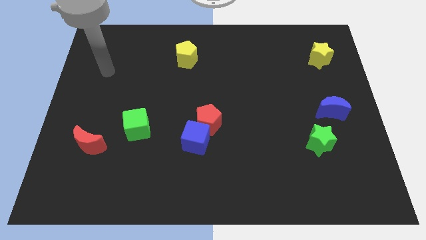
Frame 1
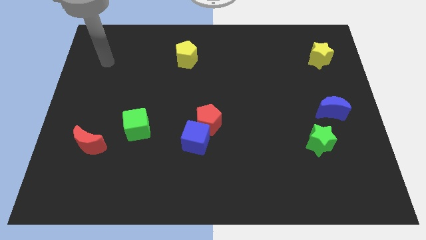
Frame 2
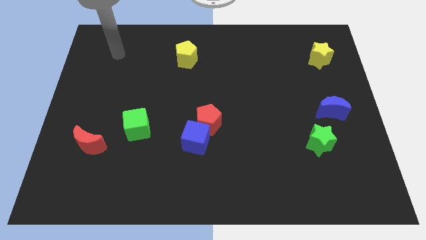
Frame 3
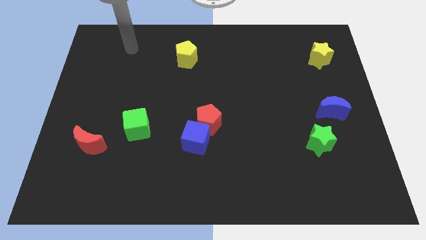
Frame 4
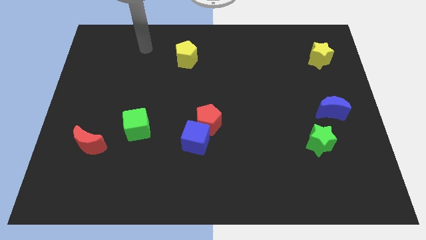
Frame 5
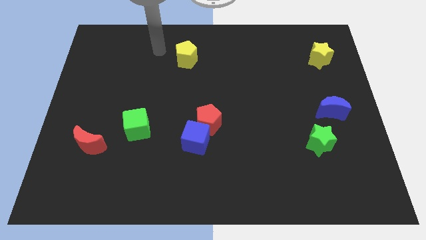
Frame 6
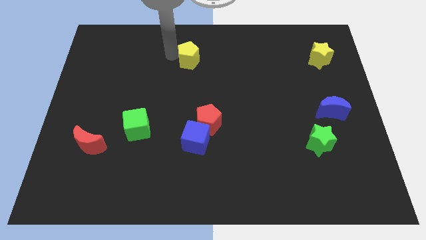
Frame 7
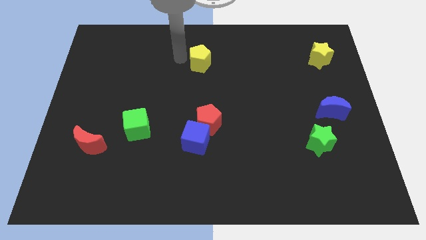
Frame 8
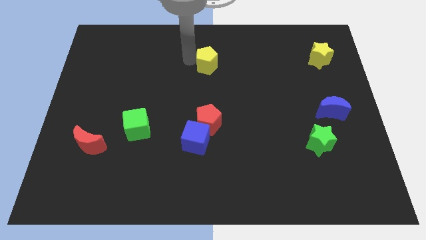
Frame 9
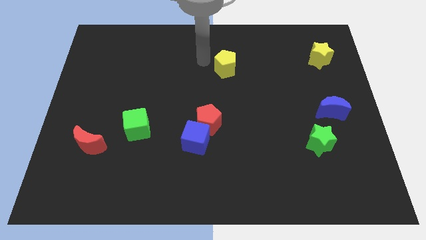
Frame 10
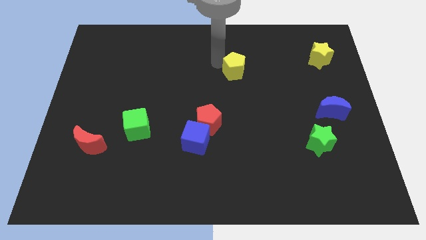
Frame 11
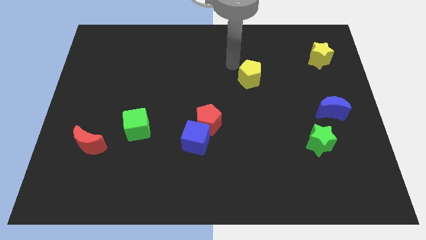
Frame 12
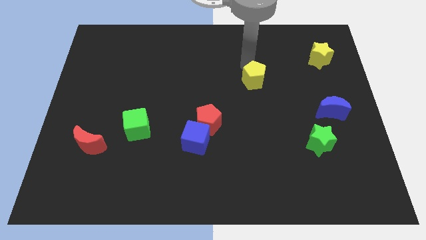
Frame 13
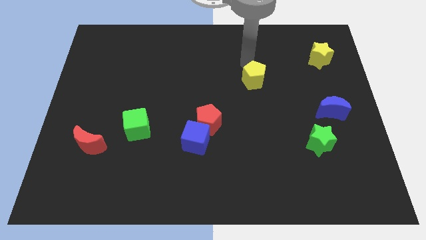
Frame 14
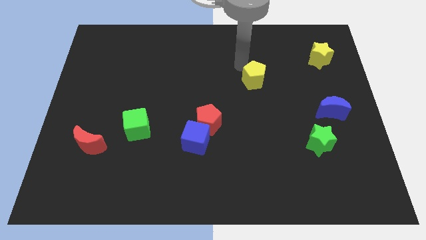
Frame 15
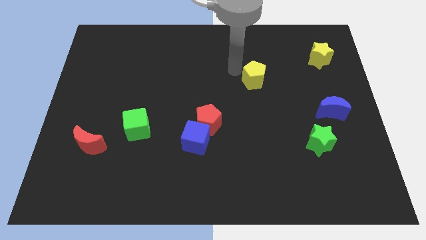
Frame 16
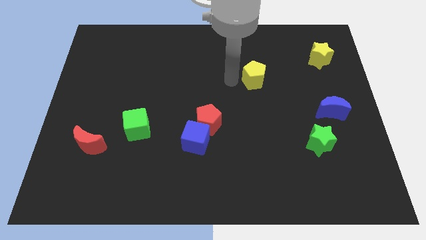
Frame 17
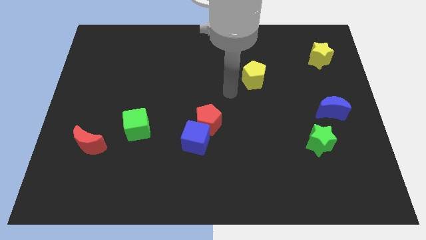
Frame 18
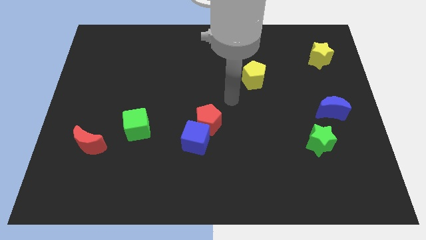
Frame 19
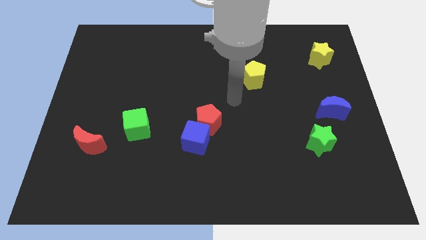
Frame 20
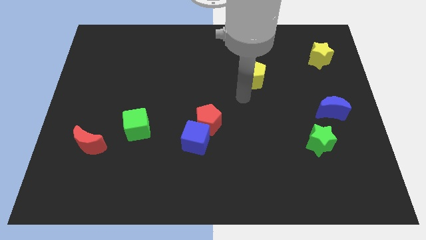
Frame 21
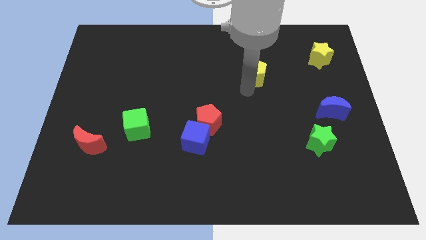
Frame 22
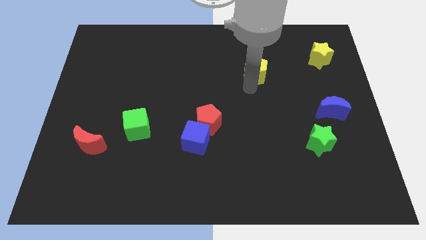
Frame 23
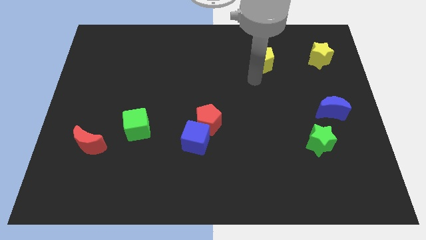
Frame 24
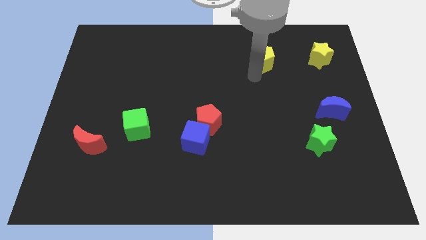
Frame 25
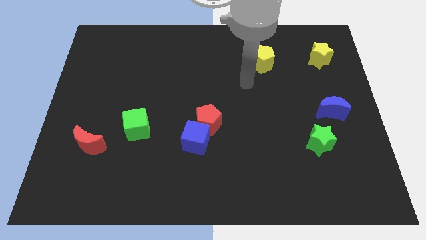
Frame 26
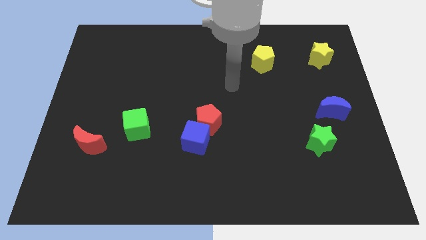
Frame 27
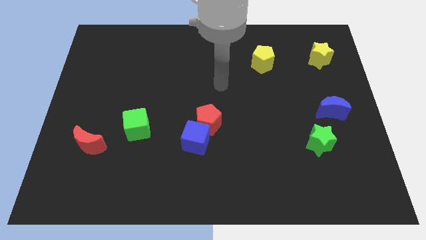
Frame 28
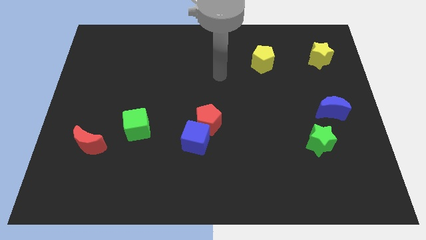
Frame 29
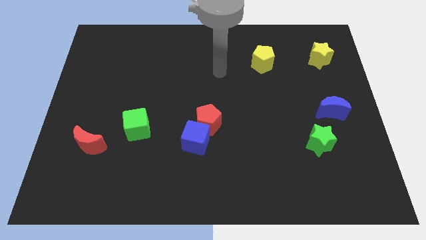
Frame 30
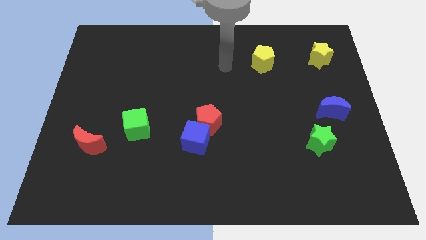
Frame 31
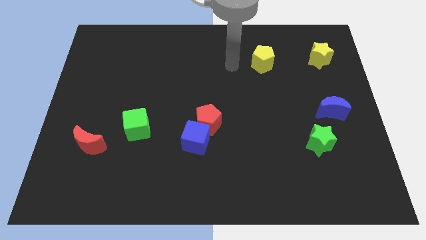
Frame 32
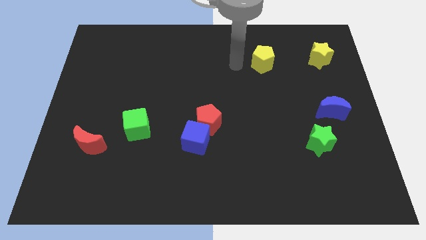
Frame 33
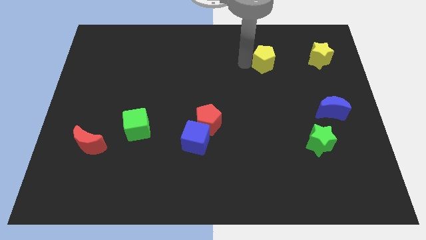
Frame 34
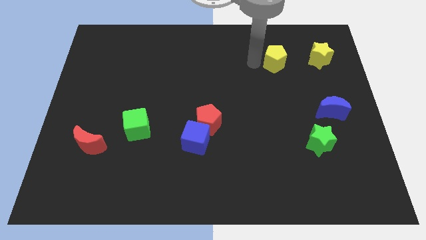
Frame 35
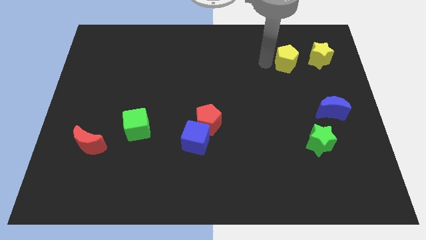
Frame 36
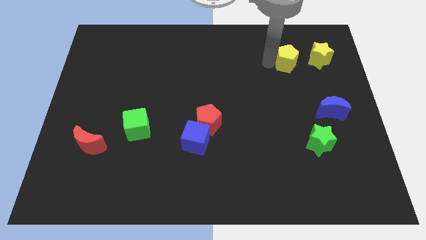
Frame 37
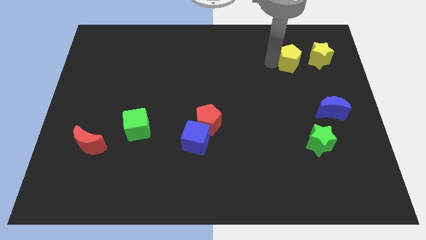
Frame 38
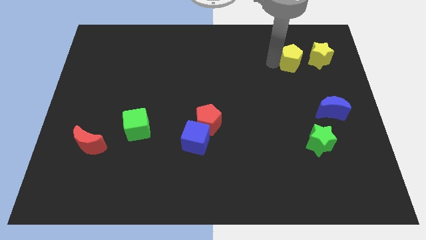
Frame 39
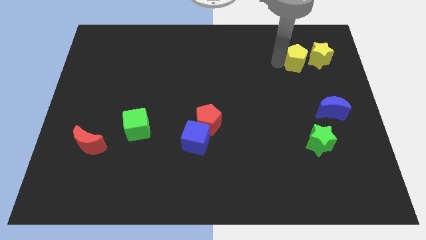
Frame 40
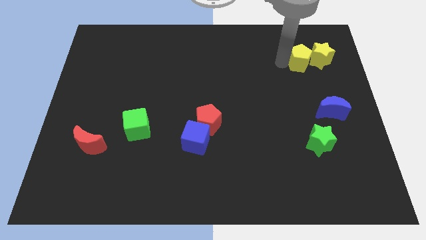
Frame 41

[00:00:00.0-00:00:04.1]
push the yellow pentagon left to the yellow star

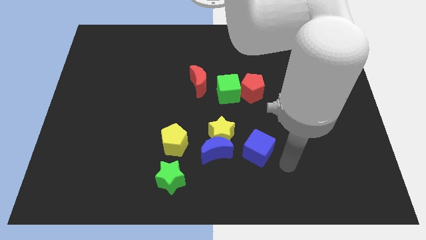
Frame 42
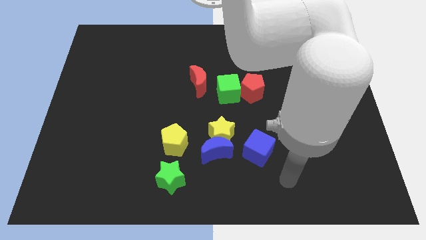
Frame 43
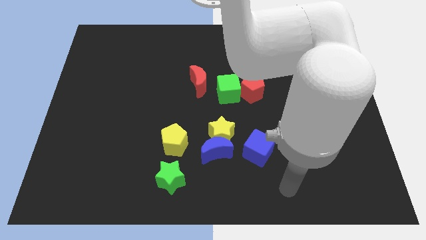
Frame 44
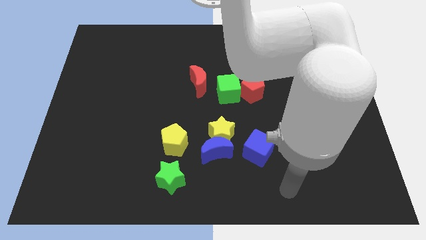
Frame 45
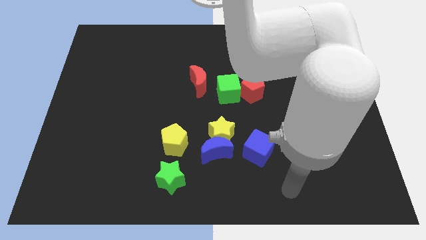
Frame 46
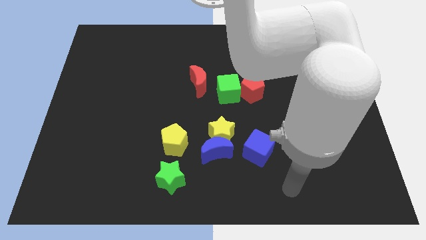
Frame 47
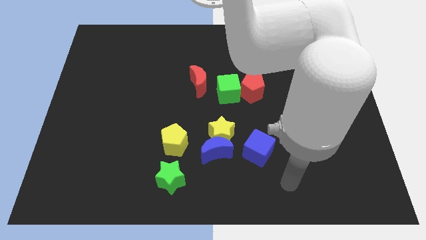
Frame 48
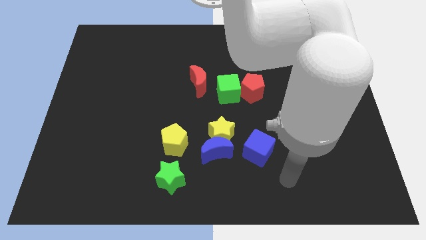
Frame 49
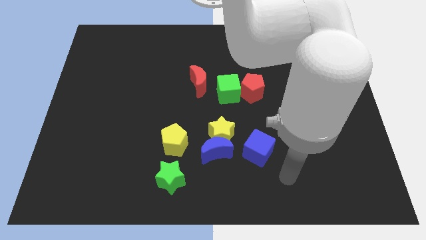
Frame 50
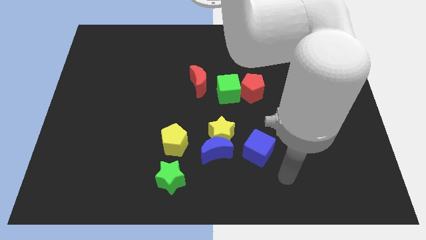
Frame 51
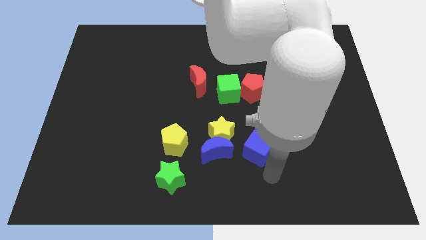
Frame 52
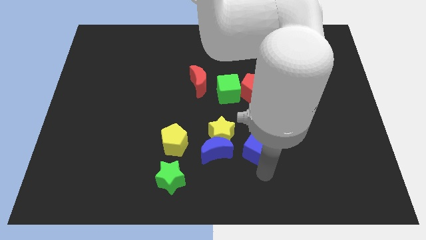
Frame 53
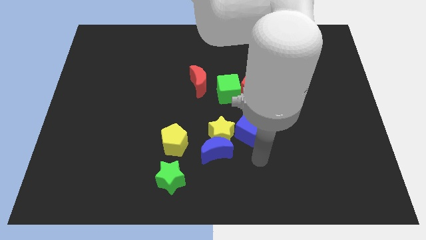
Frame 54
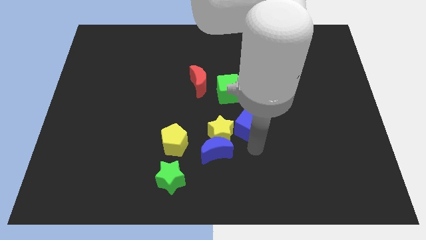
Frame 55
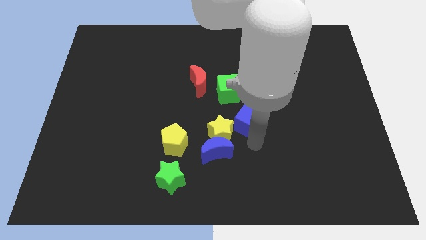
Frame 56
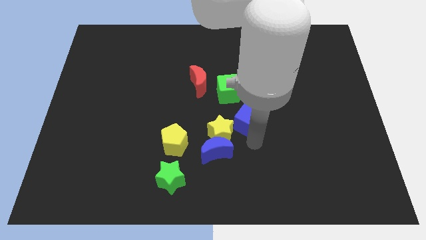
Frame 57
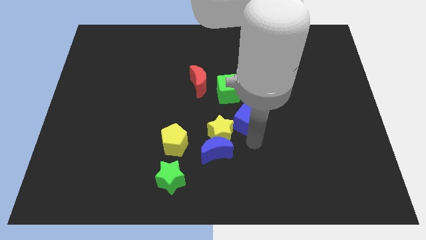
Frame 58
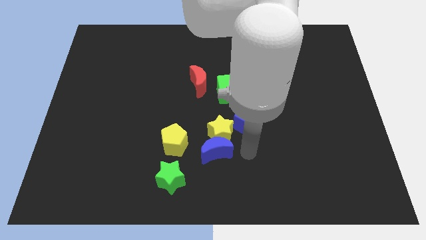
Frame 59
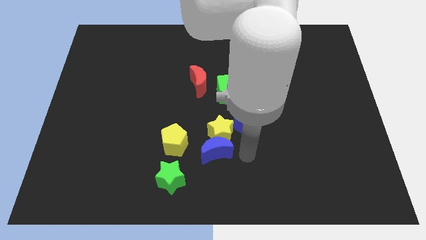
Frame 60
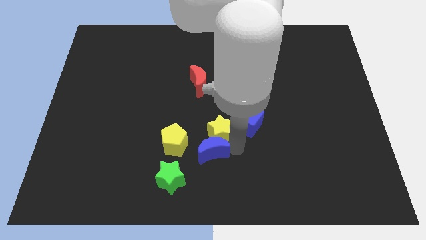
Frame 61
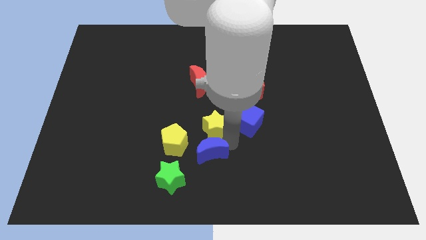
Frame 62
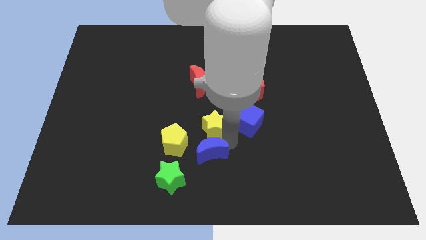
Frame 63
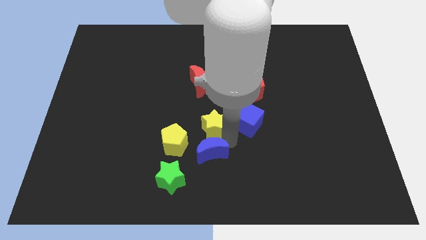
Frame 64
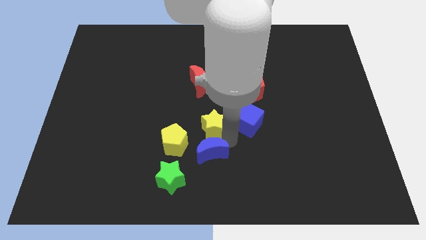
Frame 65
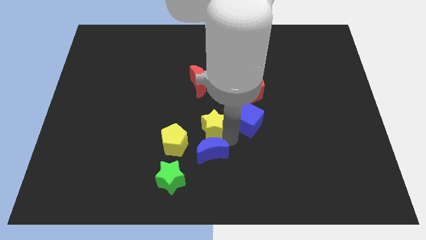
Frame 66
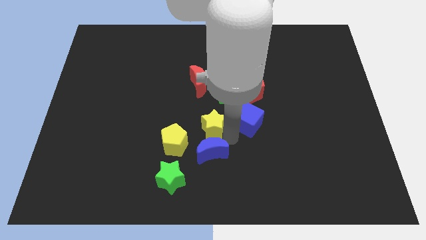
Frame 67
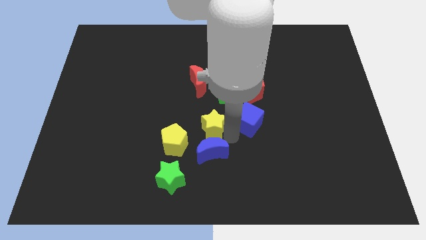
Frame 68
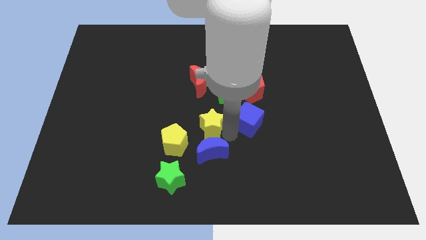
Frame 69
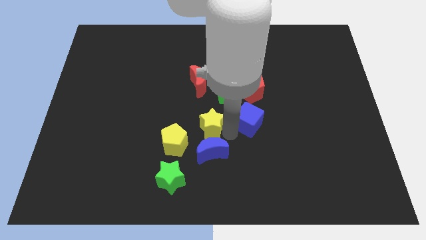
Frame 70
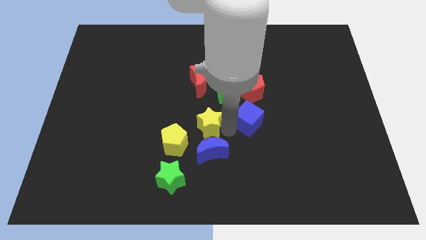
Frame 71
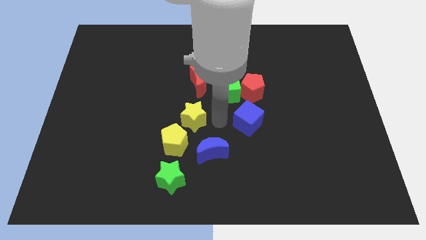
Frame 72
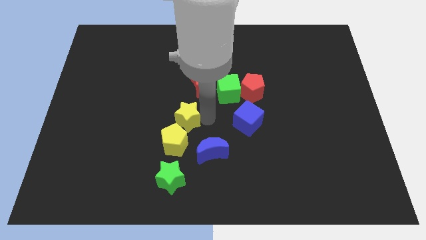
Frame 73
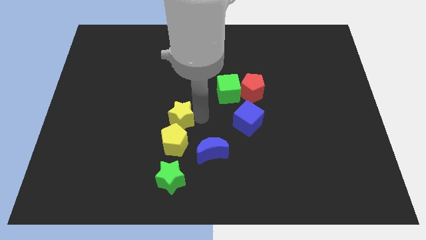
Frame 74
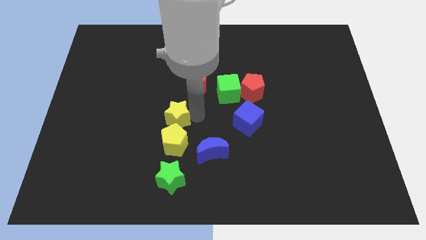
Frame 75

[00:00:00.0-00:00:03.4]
place the blue cube below the red pentagon

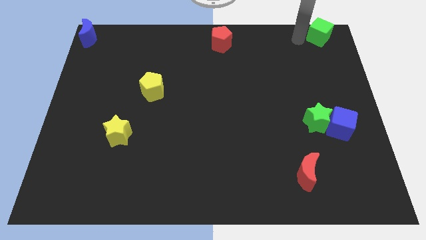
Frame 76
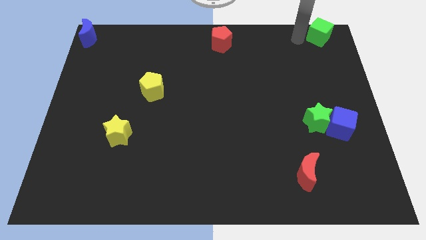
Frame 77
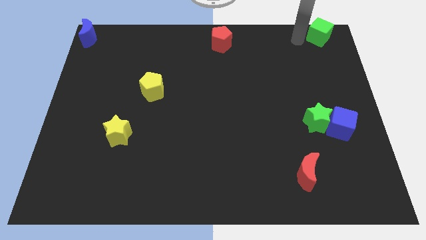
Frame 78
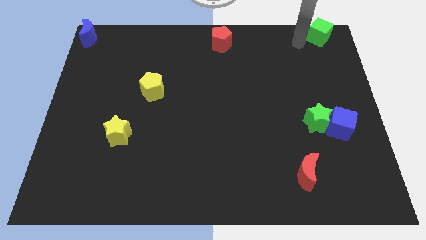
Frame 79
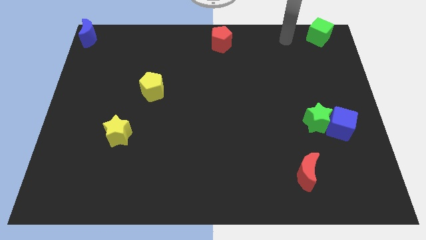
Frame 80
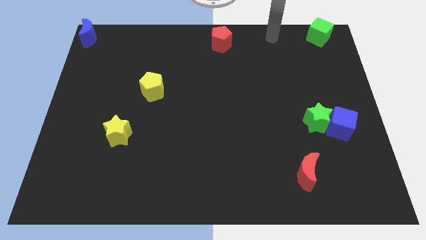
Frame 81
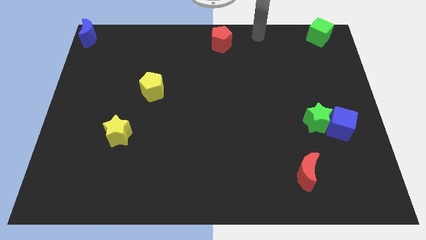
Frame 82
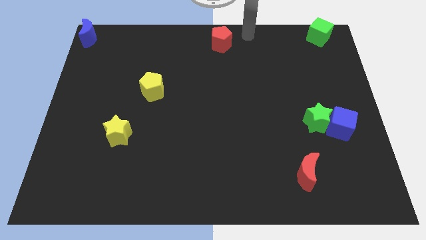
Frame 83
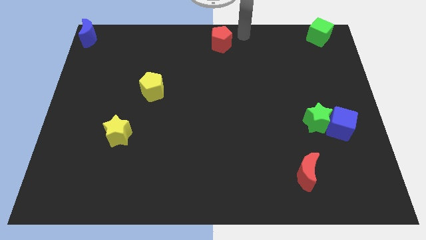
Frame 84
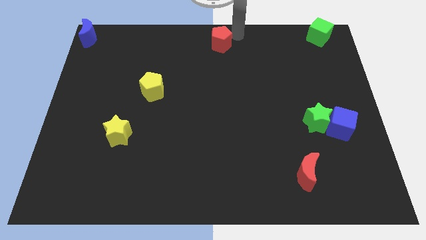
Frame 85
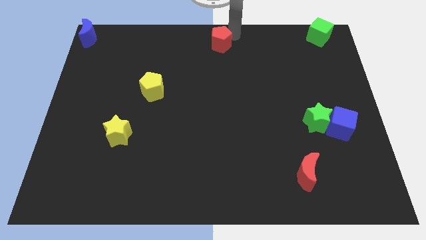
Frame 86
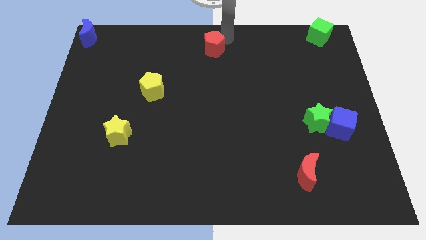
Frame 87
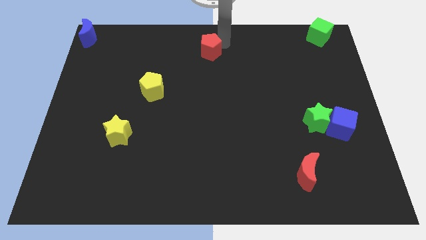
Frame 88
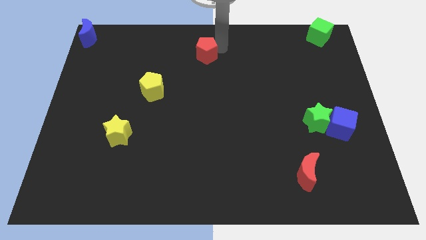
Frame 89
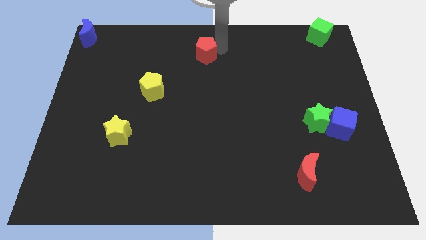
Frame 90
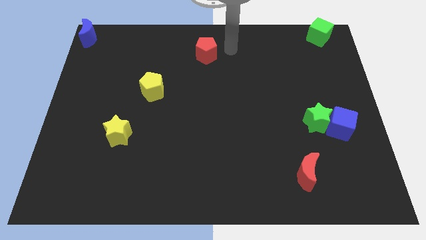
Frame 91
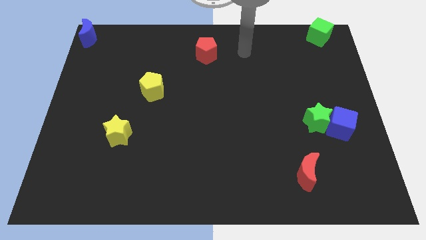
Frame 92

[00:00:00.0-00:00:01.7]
push the red pentagon towards down left
